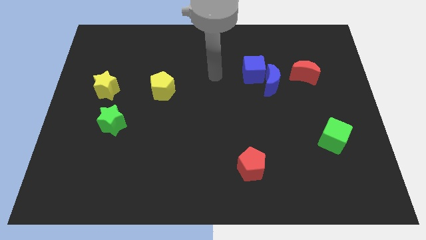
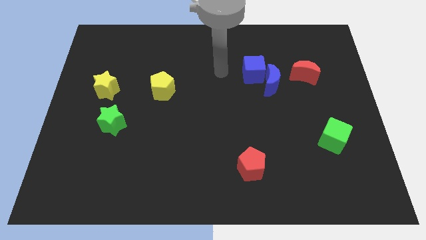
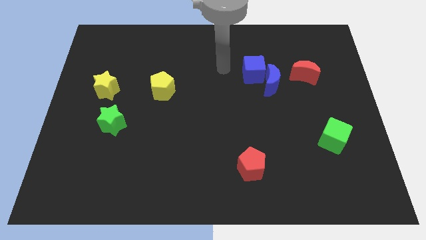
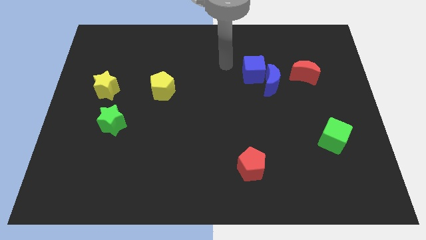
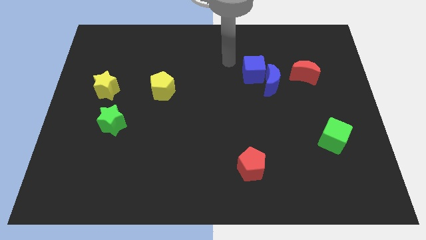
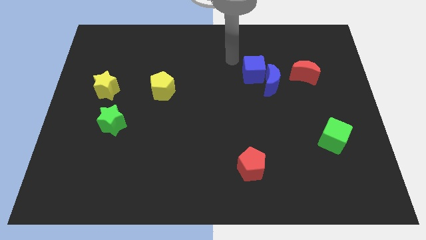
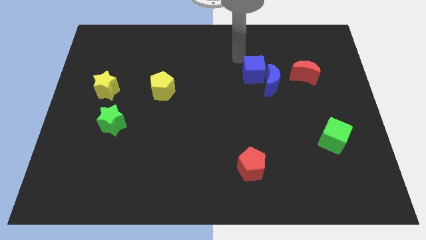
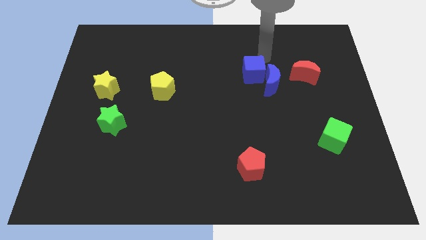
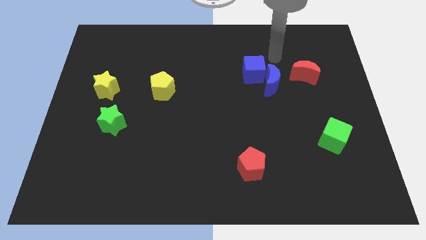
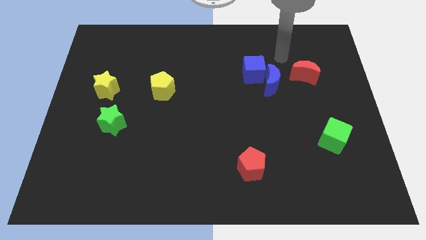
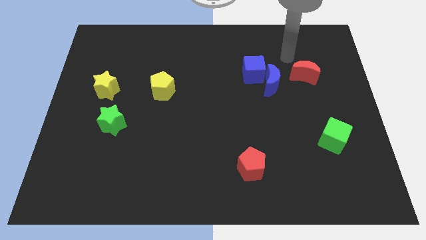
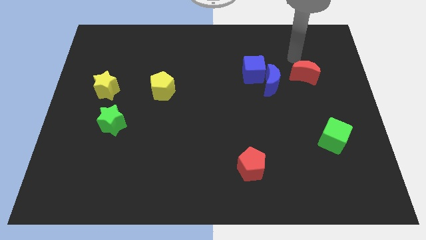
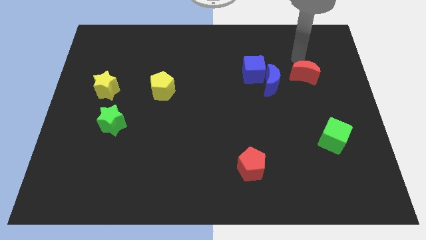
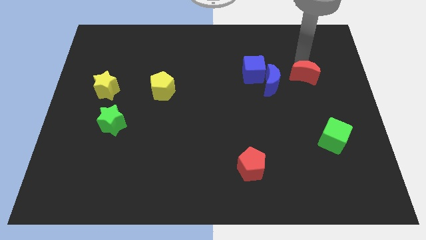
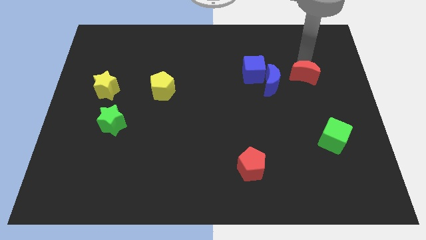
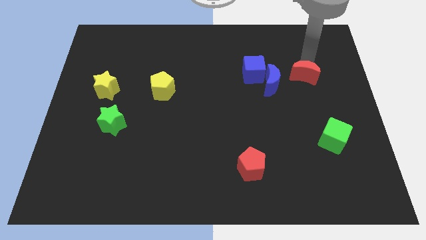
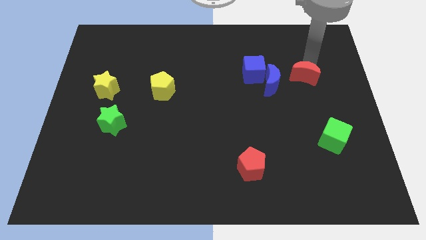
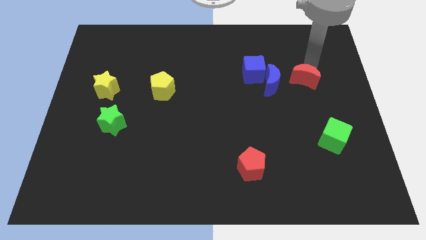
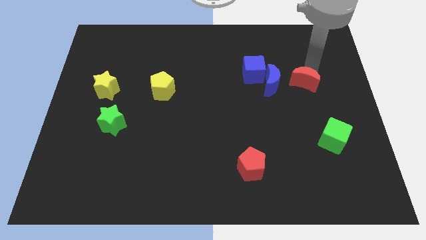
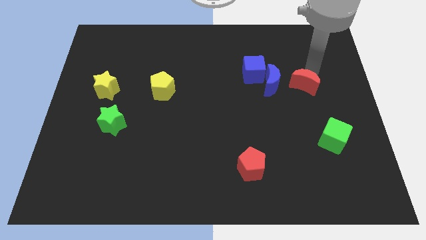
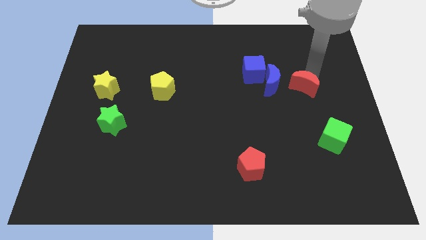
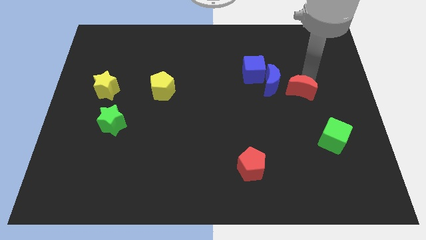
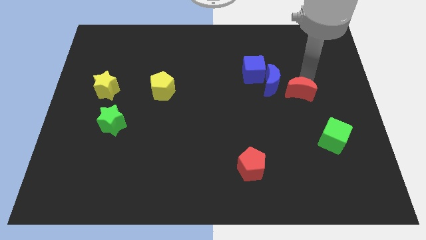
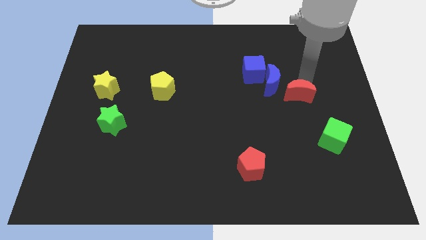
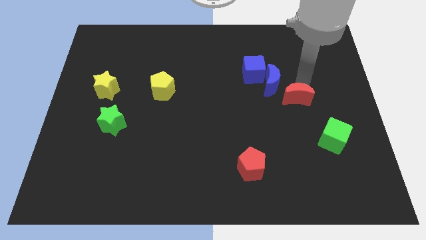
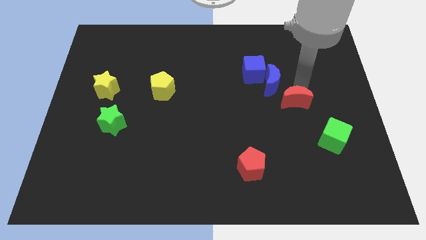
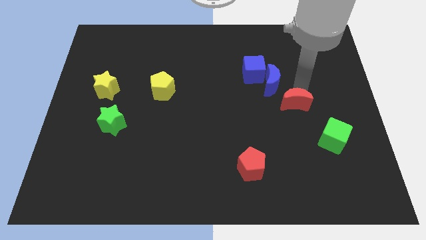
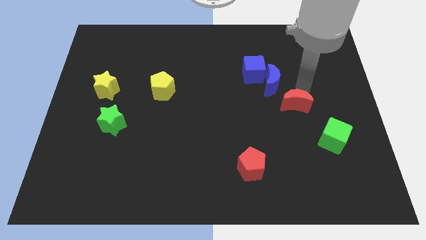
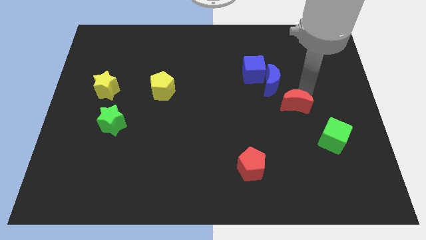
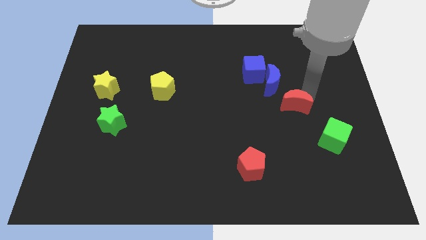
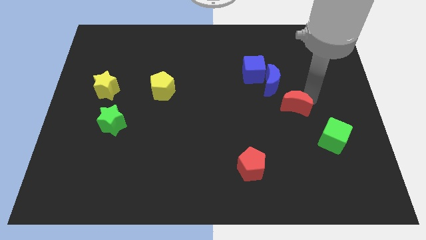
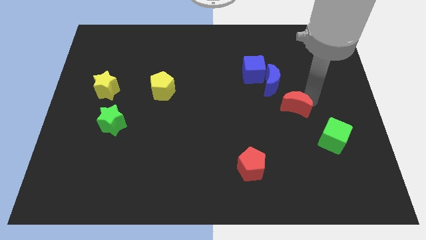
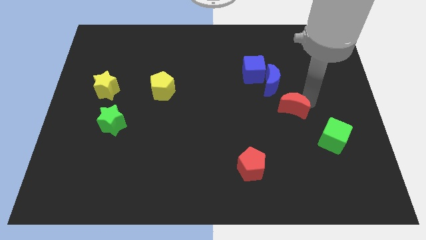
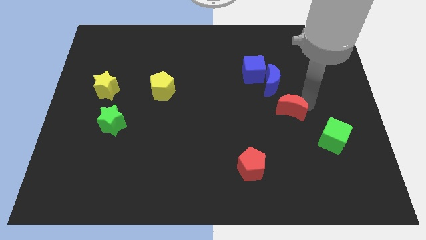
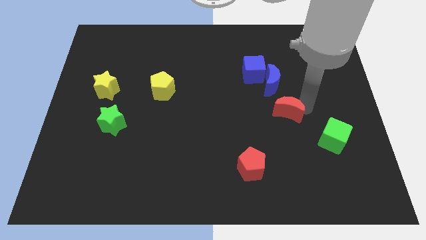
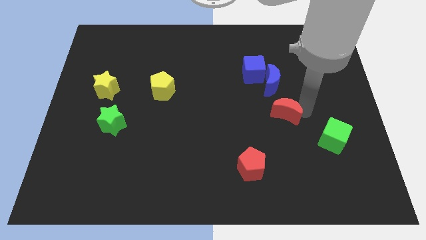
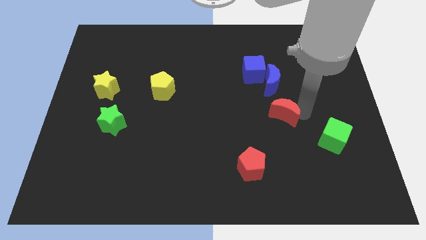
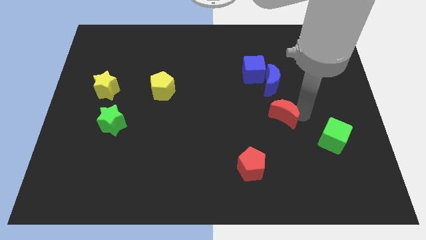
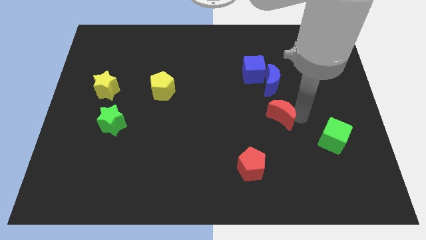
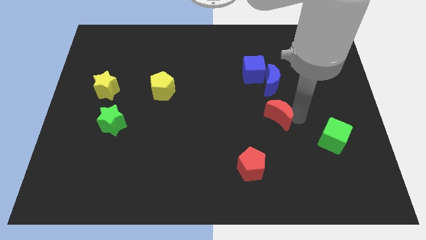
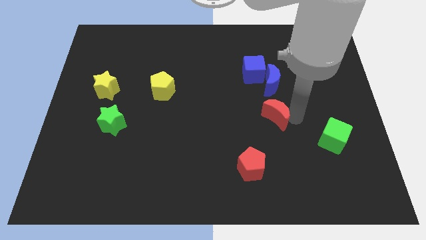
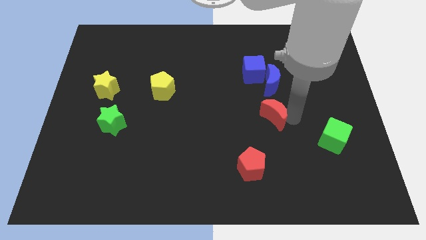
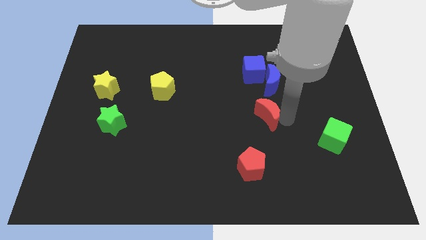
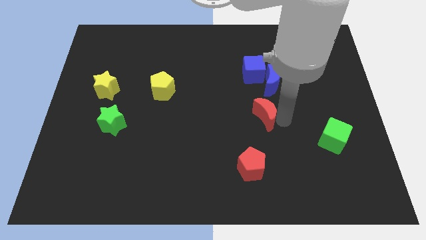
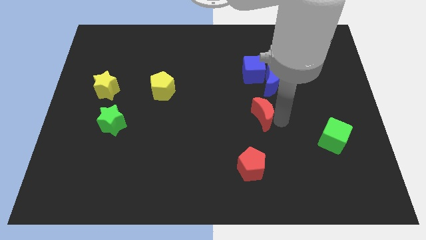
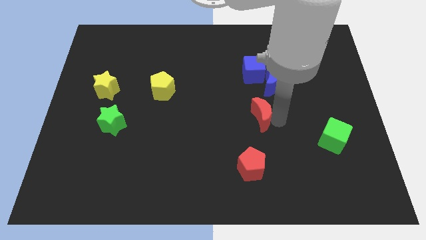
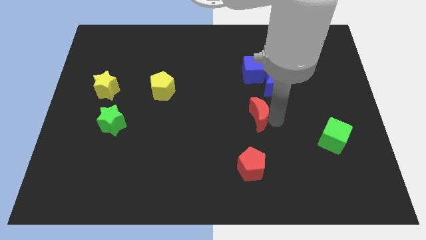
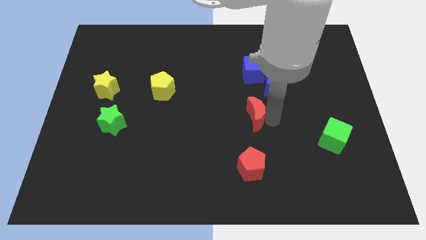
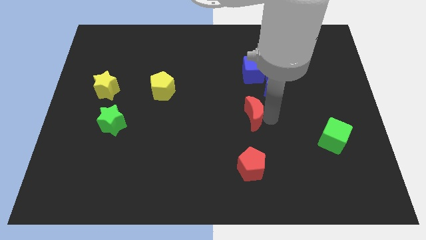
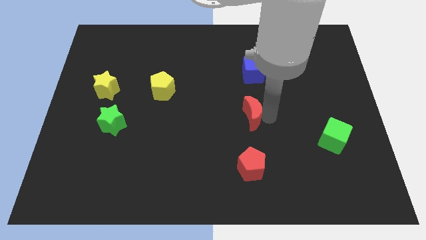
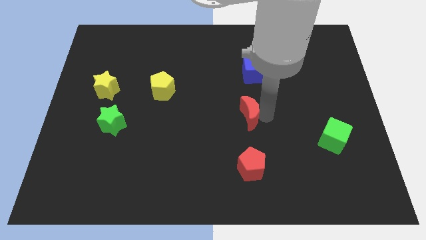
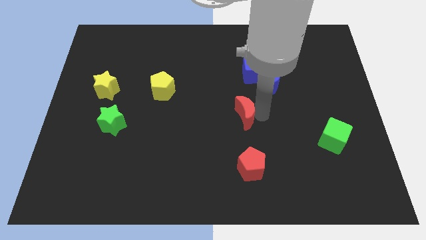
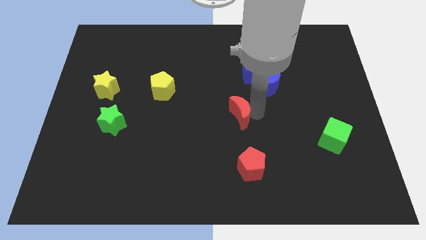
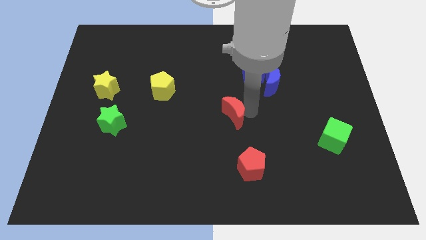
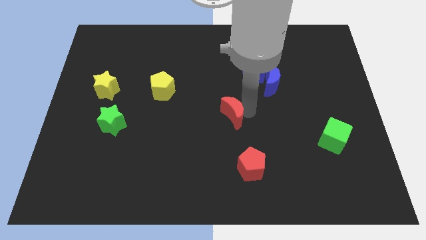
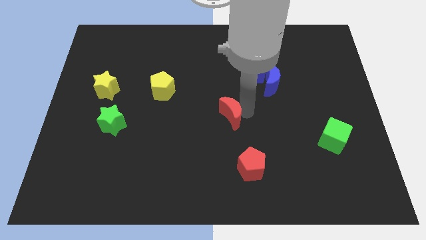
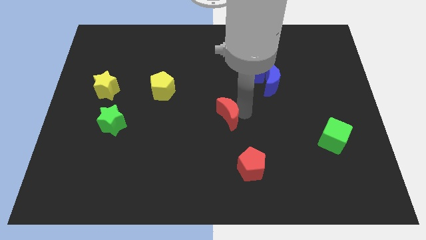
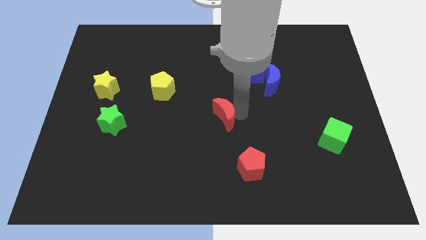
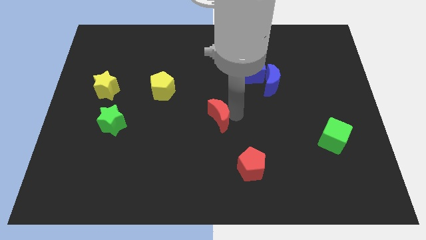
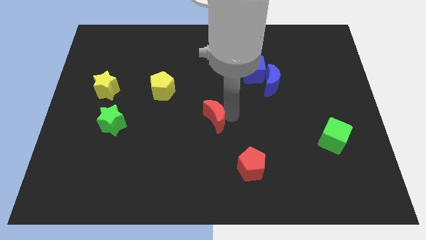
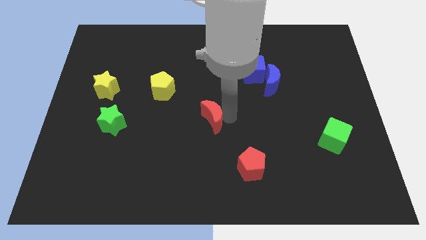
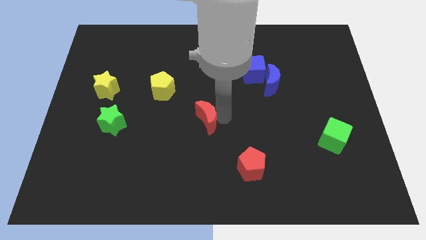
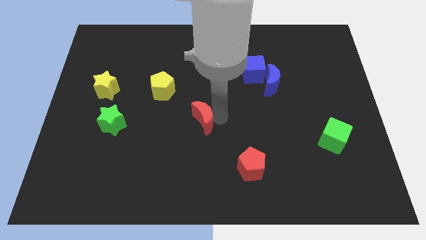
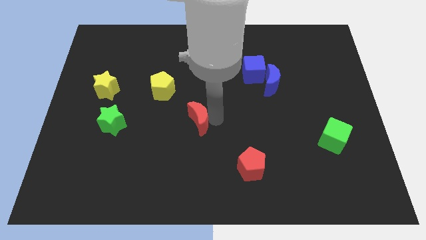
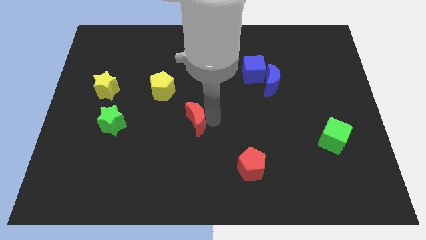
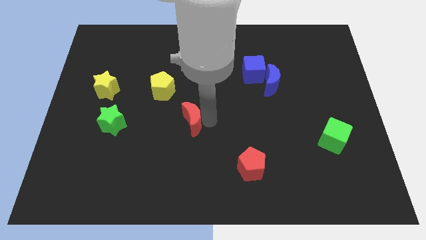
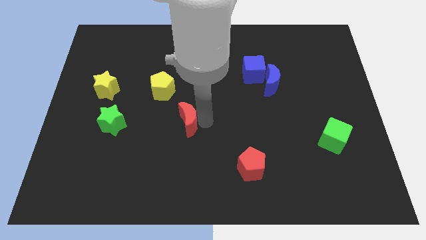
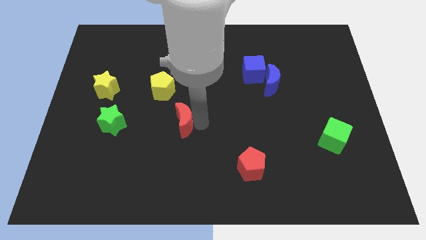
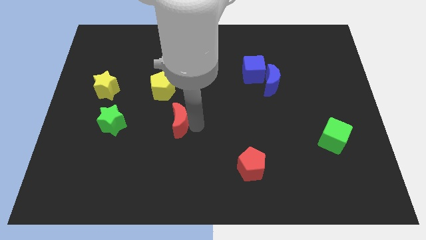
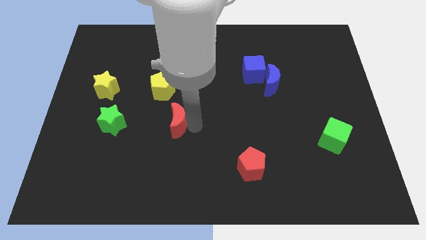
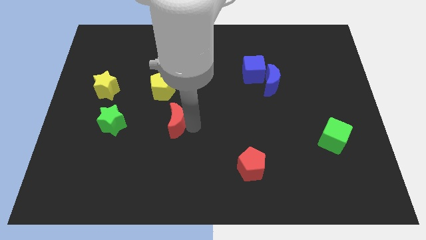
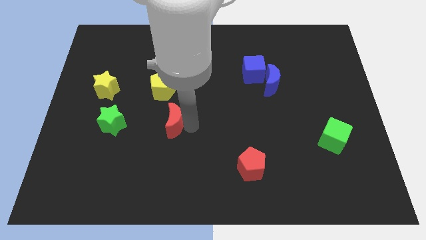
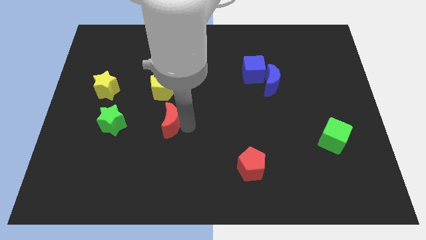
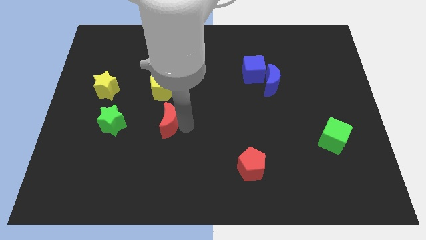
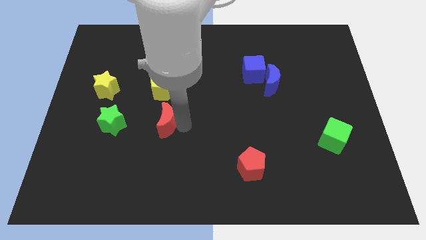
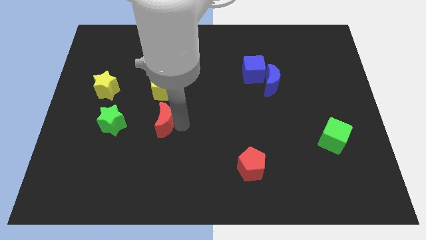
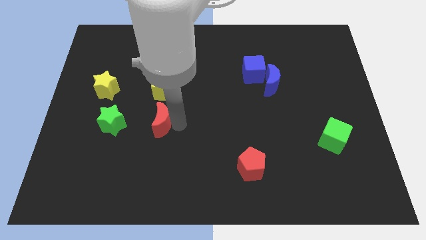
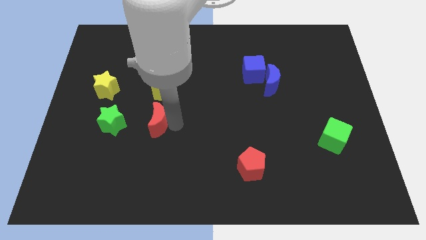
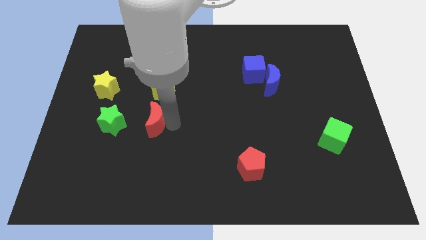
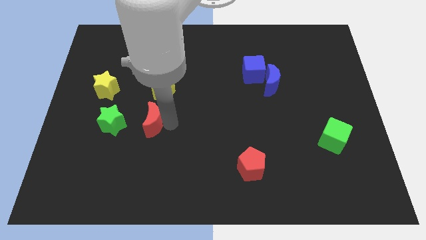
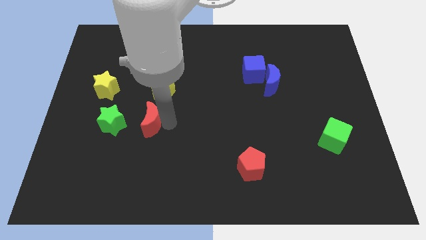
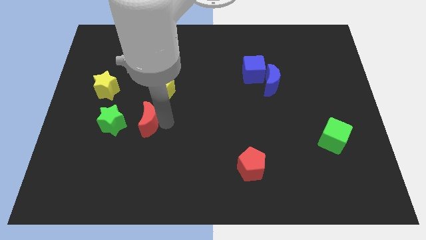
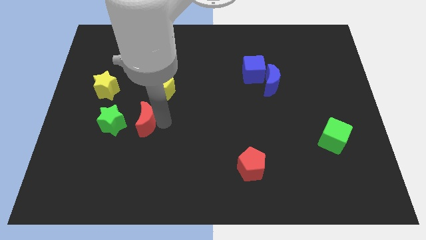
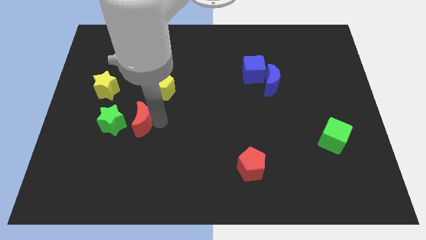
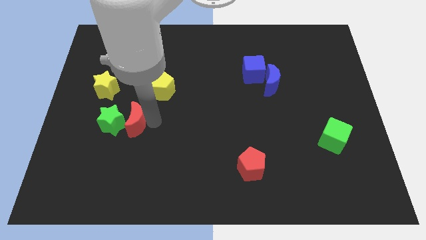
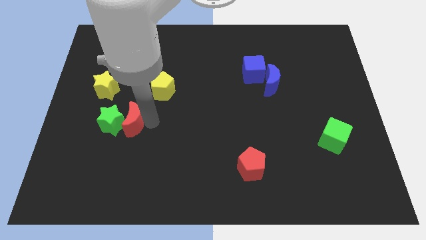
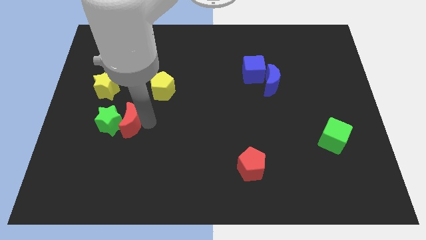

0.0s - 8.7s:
put the red moon close to the green star
